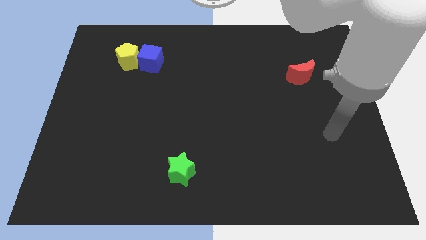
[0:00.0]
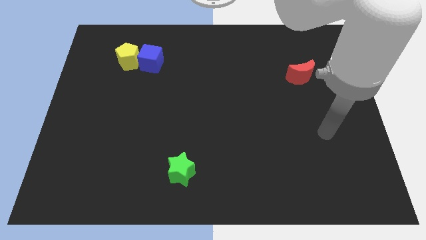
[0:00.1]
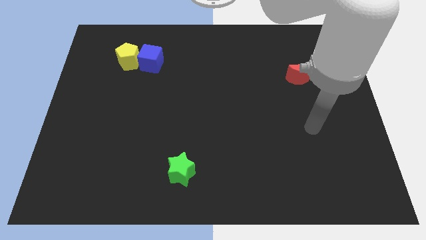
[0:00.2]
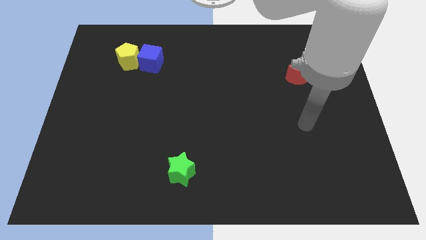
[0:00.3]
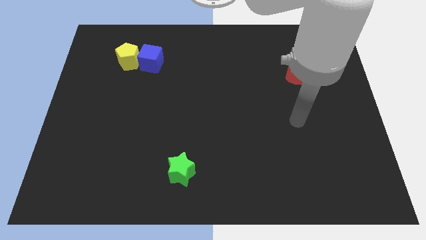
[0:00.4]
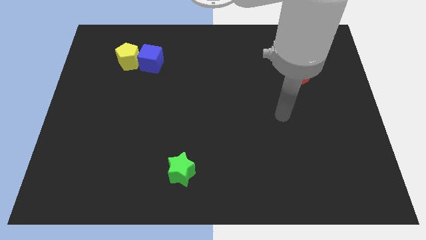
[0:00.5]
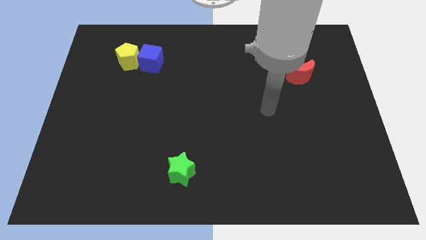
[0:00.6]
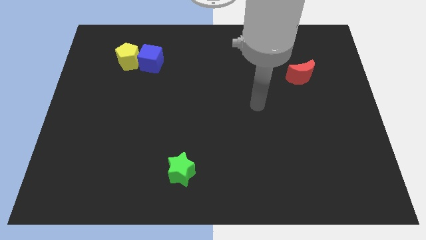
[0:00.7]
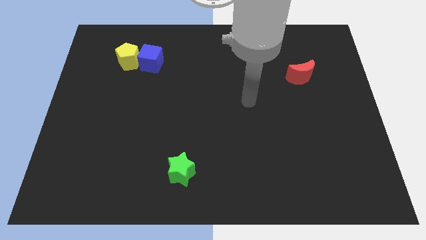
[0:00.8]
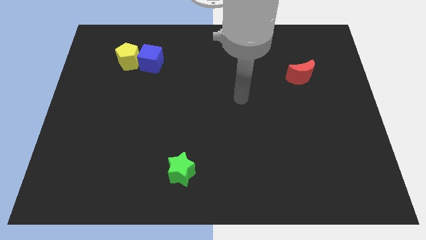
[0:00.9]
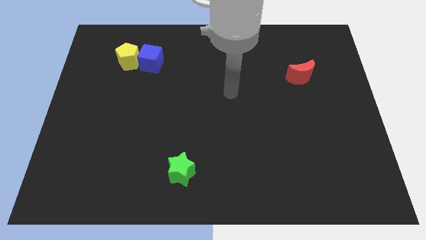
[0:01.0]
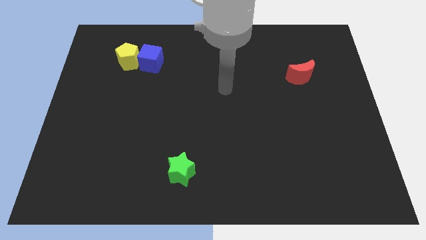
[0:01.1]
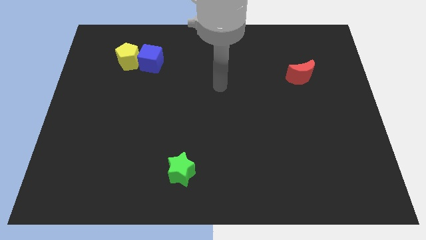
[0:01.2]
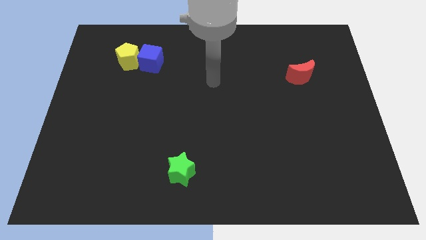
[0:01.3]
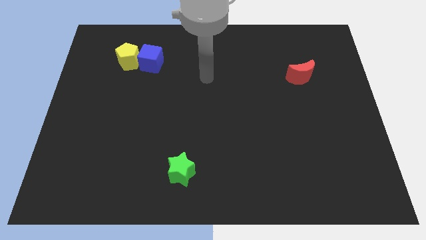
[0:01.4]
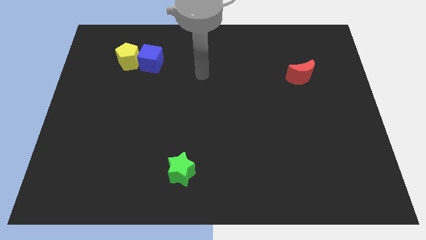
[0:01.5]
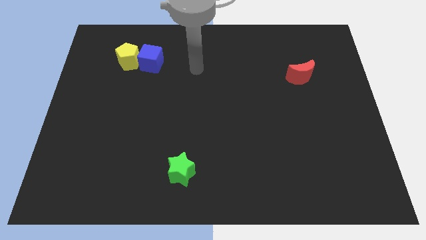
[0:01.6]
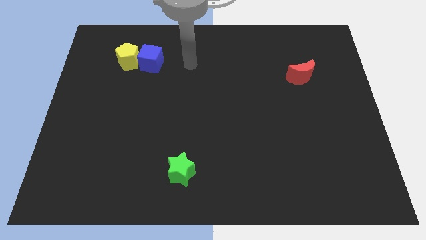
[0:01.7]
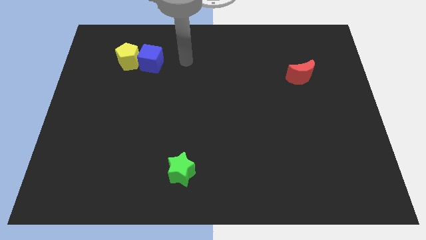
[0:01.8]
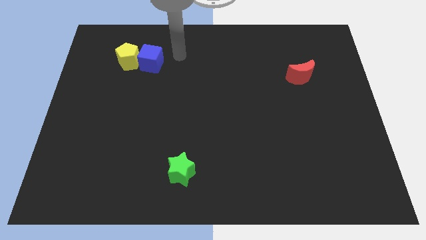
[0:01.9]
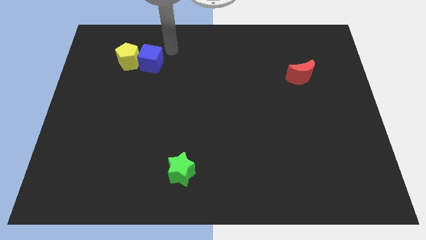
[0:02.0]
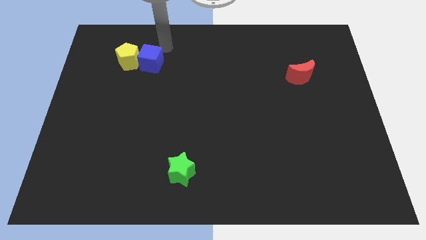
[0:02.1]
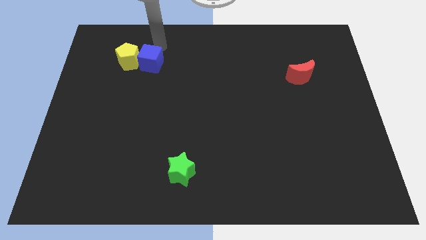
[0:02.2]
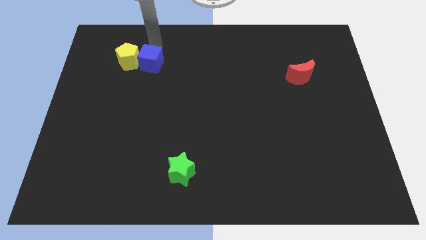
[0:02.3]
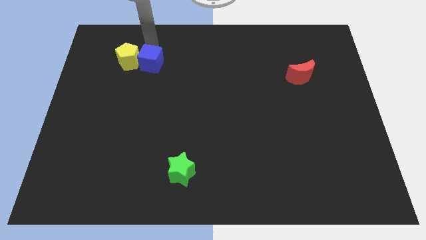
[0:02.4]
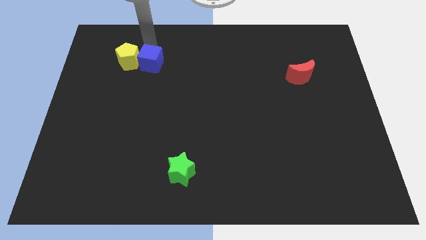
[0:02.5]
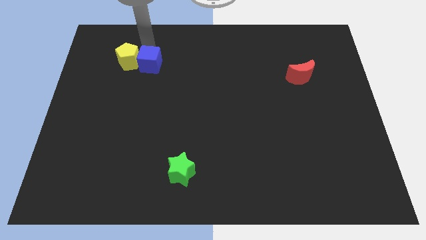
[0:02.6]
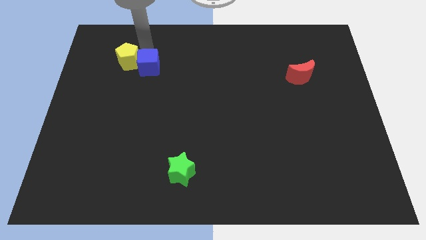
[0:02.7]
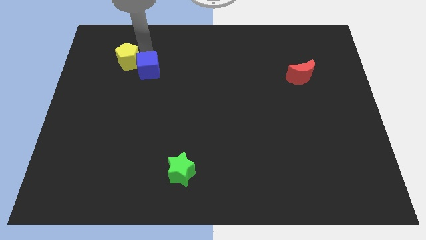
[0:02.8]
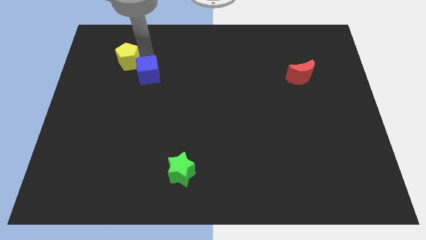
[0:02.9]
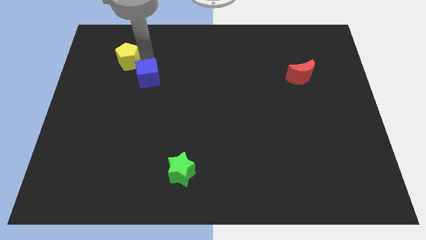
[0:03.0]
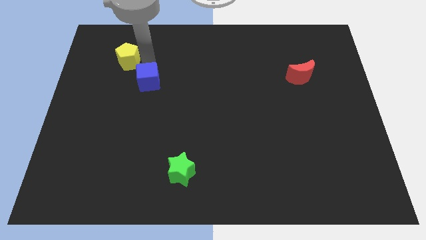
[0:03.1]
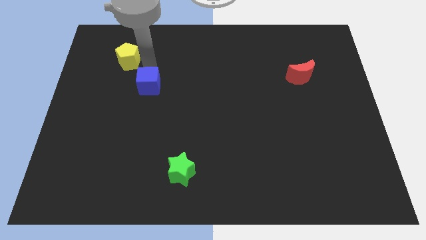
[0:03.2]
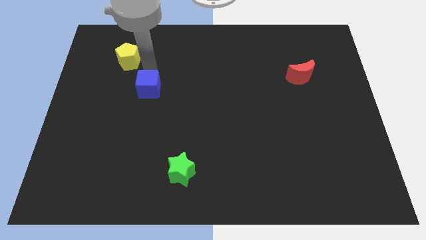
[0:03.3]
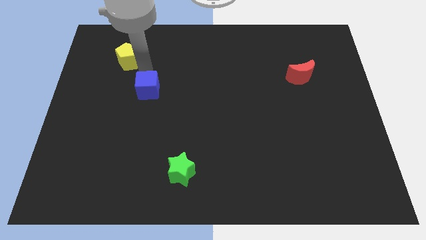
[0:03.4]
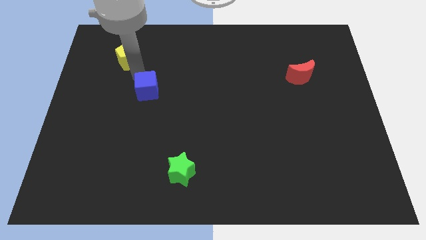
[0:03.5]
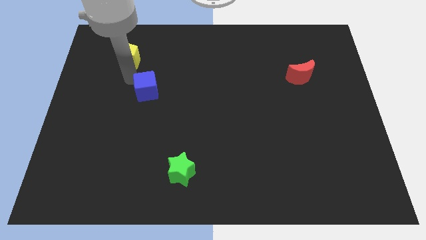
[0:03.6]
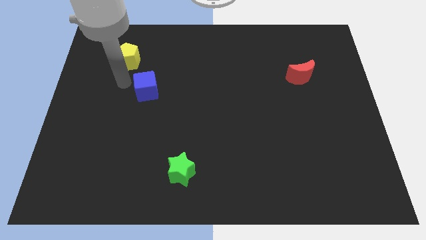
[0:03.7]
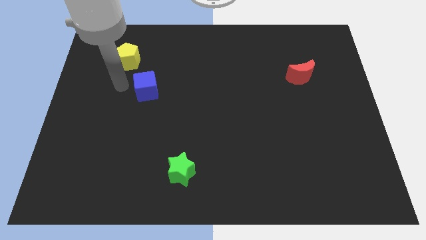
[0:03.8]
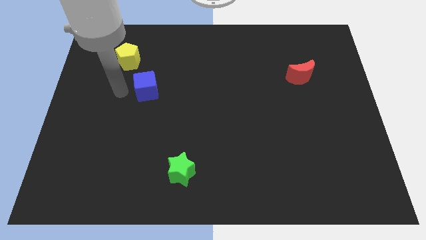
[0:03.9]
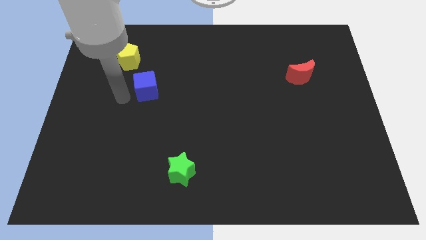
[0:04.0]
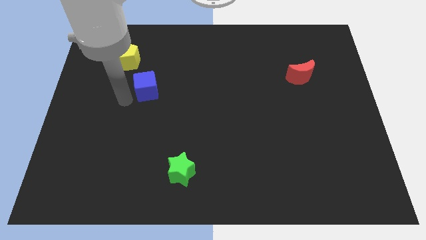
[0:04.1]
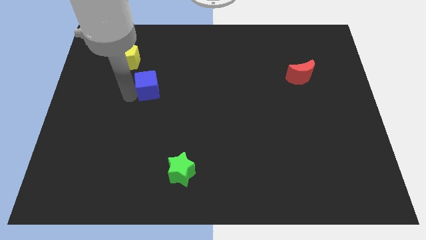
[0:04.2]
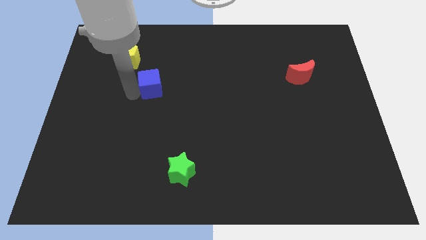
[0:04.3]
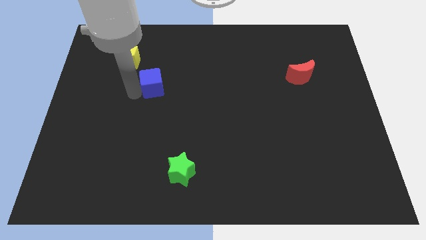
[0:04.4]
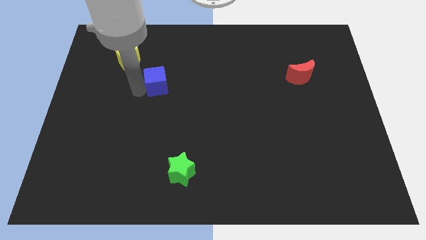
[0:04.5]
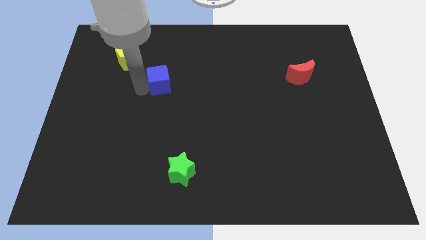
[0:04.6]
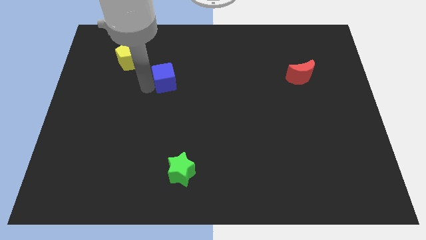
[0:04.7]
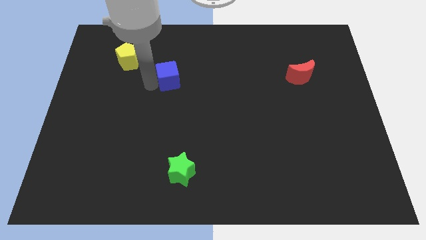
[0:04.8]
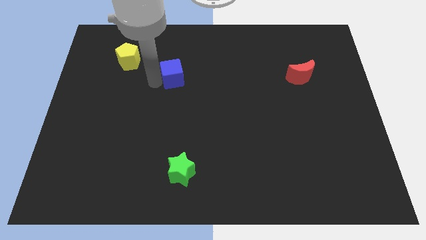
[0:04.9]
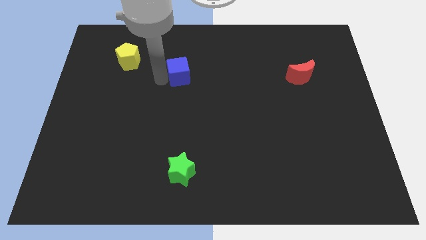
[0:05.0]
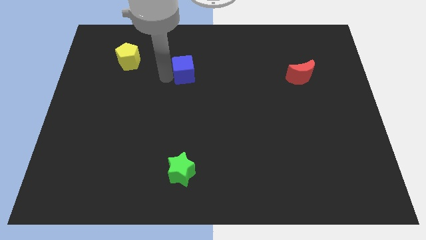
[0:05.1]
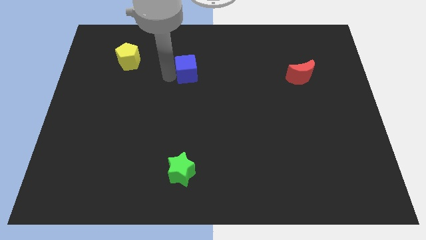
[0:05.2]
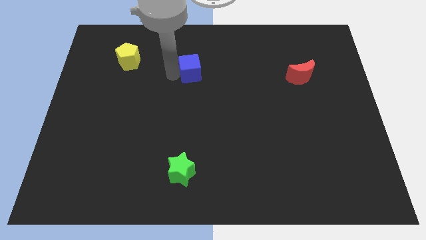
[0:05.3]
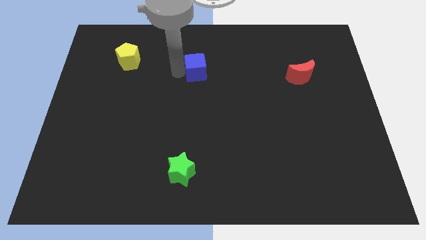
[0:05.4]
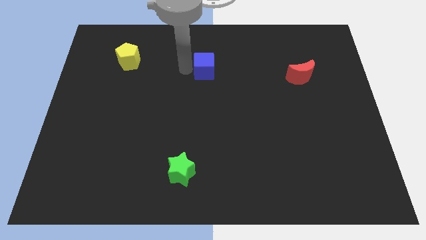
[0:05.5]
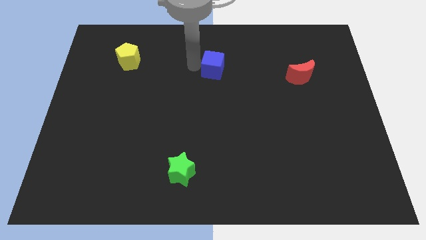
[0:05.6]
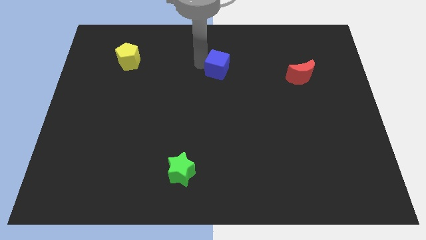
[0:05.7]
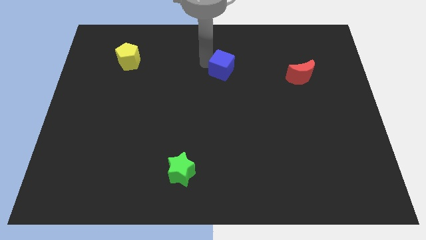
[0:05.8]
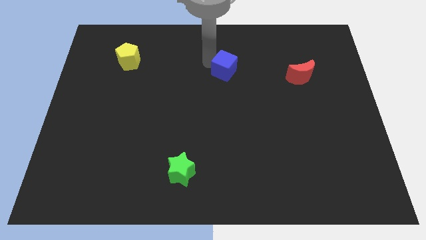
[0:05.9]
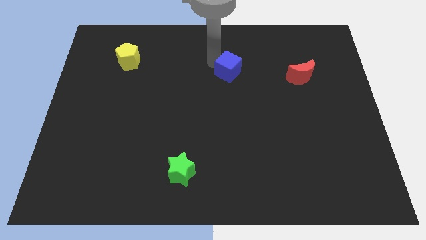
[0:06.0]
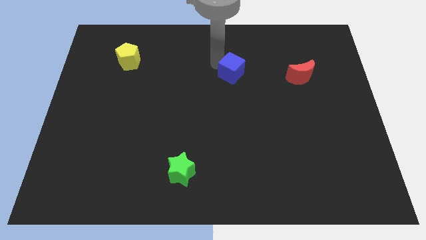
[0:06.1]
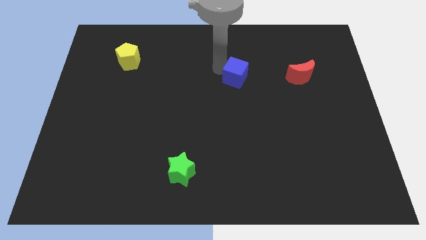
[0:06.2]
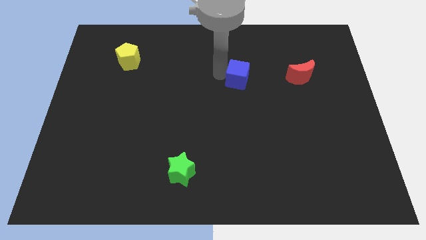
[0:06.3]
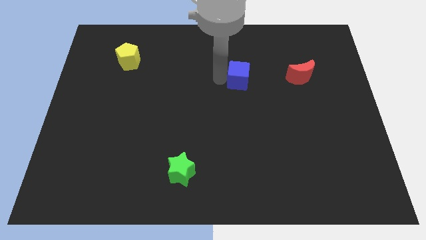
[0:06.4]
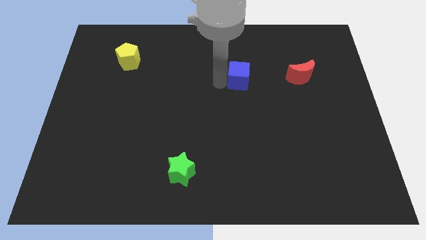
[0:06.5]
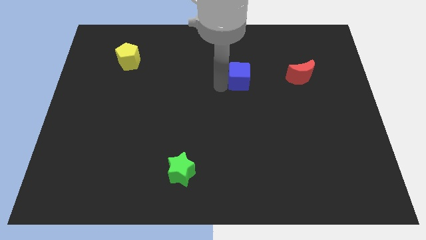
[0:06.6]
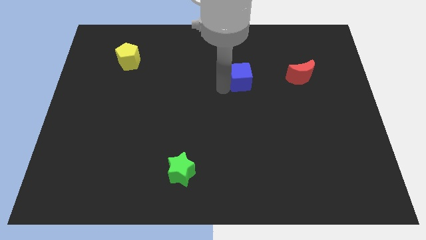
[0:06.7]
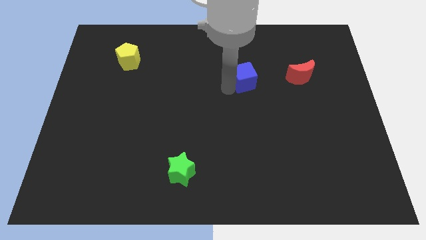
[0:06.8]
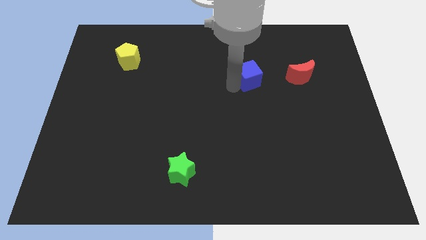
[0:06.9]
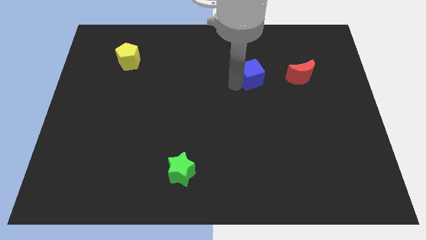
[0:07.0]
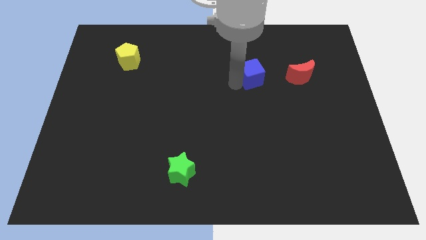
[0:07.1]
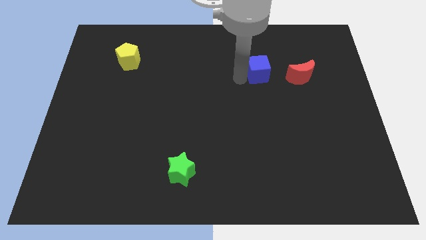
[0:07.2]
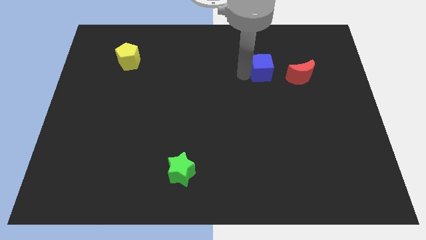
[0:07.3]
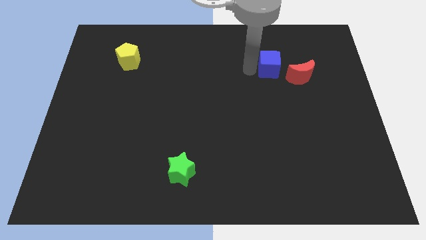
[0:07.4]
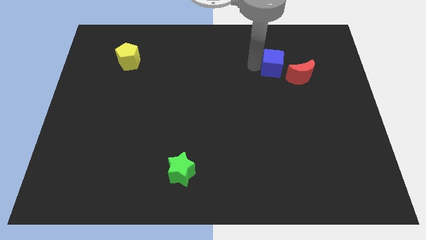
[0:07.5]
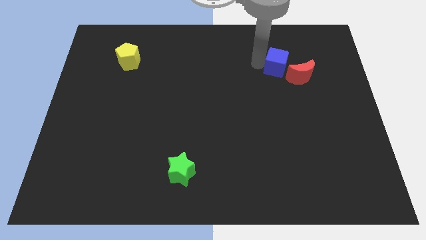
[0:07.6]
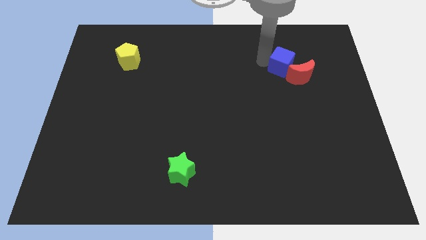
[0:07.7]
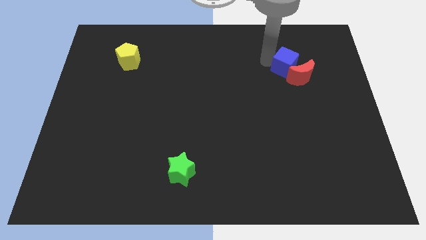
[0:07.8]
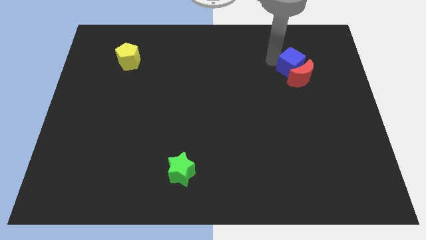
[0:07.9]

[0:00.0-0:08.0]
push the cube next to the red moon

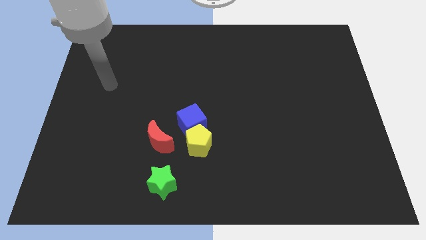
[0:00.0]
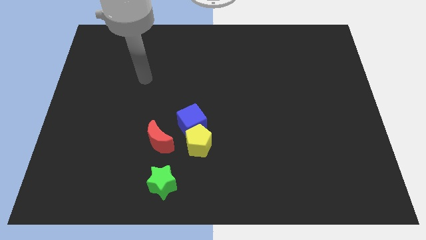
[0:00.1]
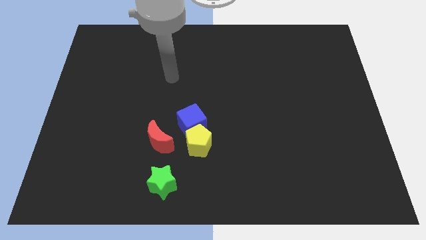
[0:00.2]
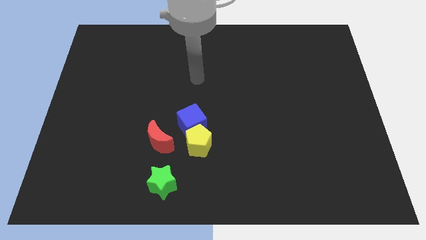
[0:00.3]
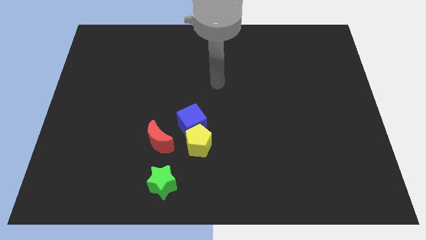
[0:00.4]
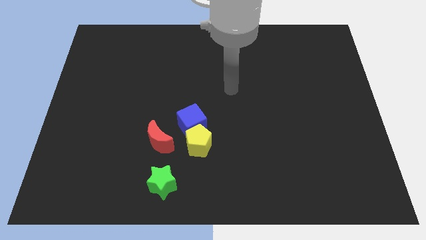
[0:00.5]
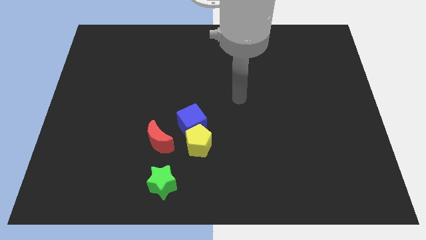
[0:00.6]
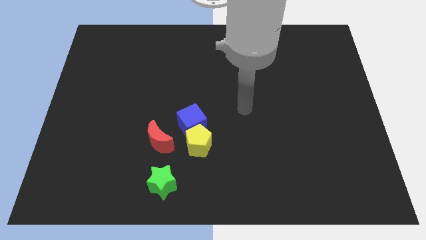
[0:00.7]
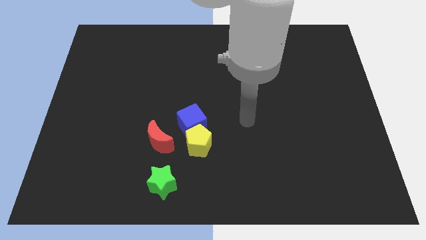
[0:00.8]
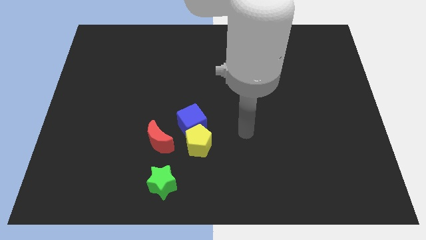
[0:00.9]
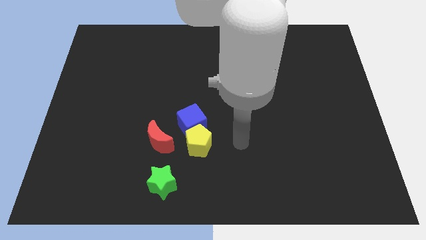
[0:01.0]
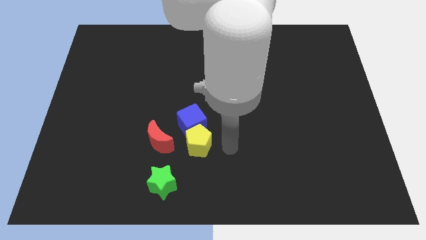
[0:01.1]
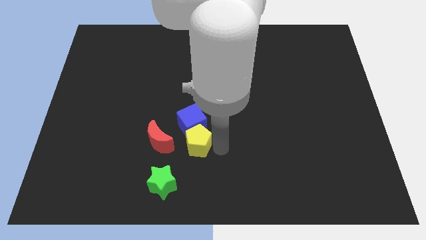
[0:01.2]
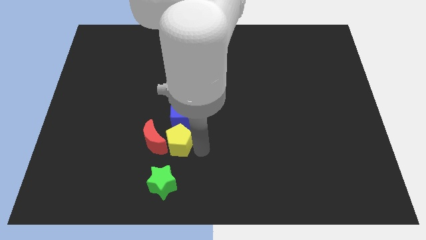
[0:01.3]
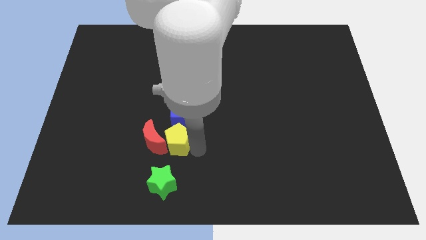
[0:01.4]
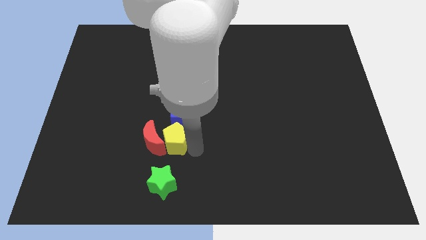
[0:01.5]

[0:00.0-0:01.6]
put the yellow pentagon next to the red moon
